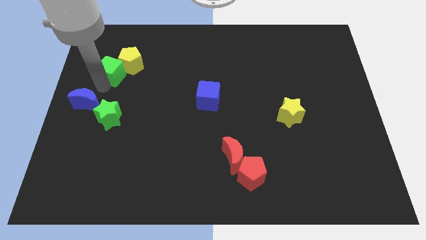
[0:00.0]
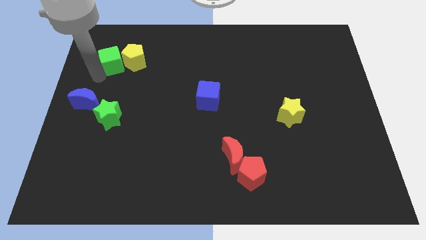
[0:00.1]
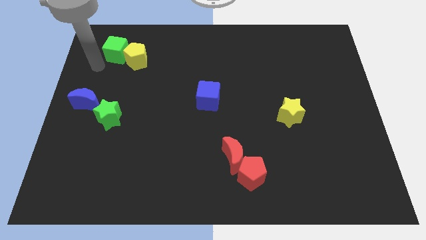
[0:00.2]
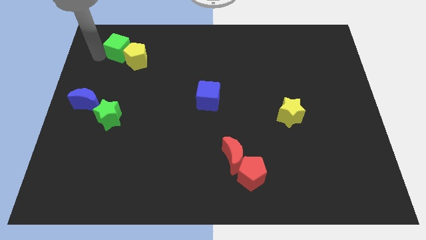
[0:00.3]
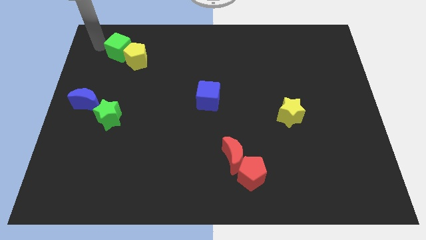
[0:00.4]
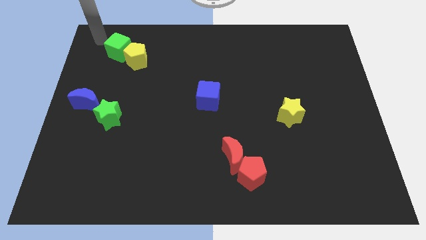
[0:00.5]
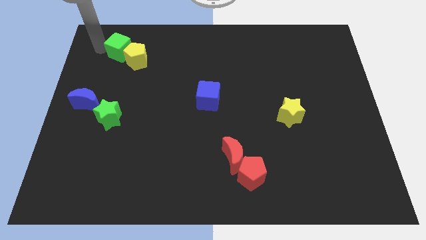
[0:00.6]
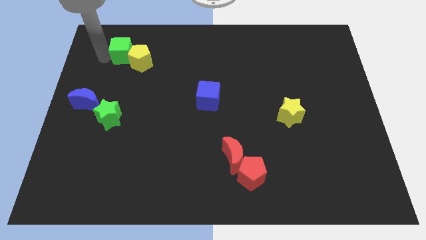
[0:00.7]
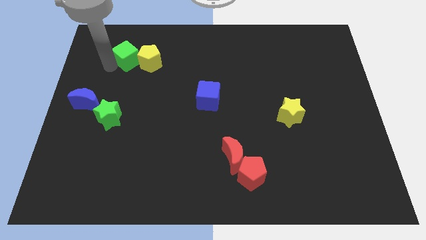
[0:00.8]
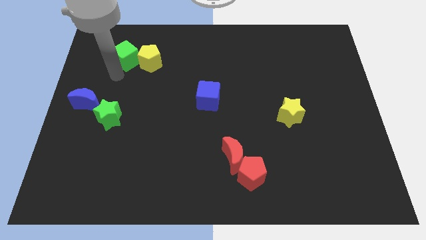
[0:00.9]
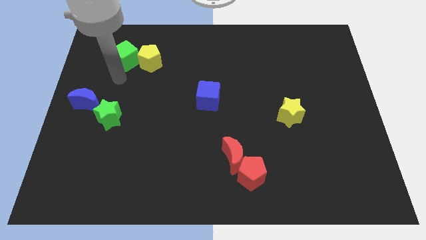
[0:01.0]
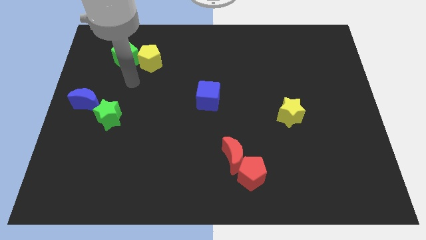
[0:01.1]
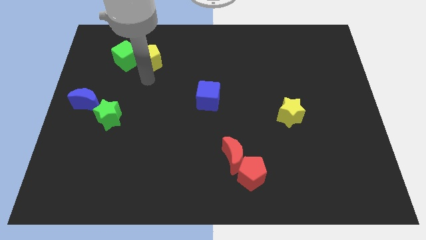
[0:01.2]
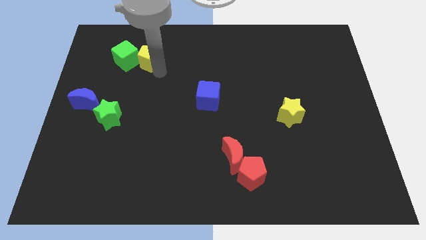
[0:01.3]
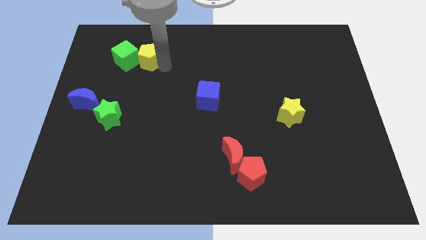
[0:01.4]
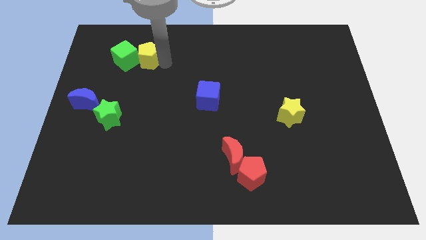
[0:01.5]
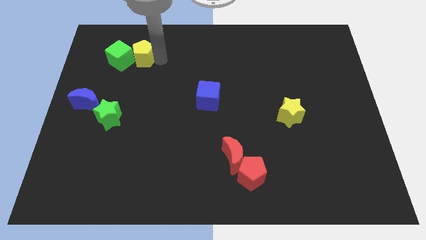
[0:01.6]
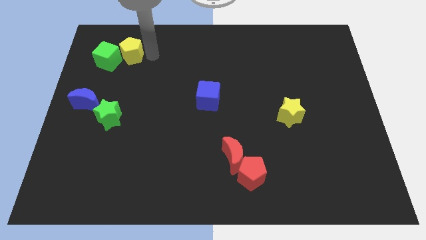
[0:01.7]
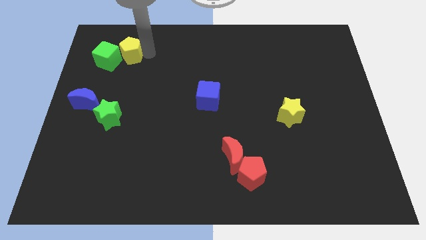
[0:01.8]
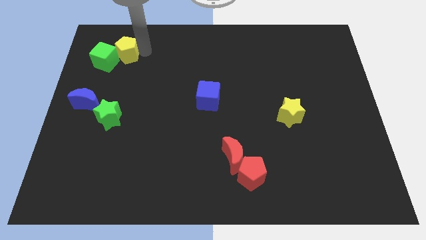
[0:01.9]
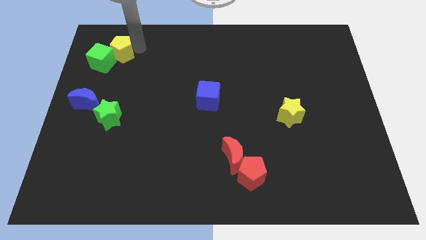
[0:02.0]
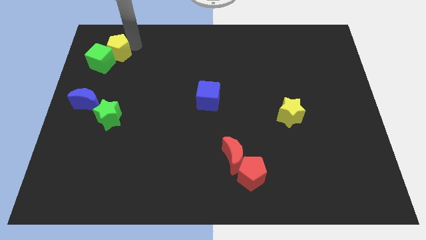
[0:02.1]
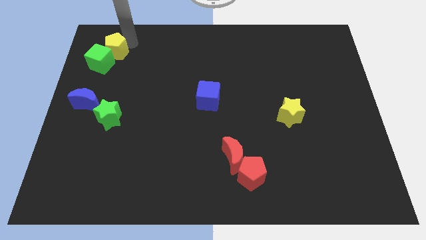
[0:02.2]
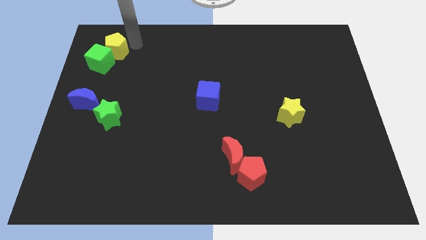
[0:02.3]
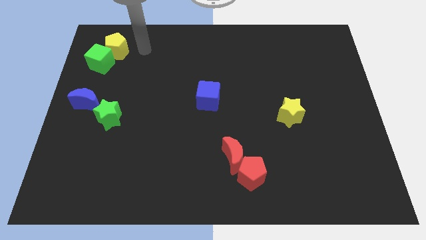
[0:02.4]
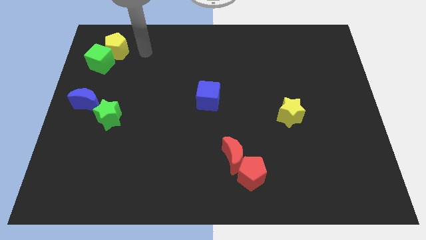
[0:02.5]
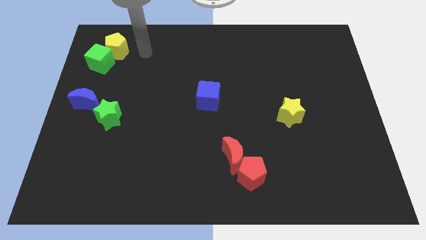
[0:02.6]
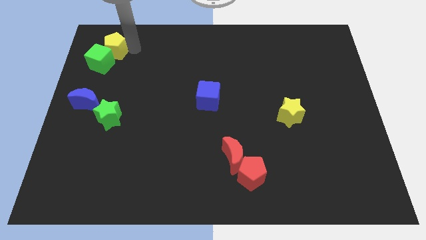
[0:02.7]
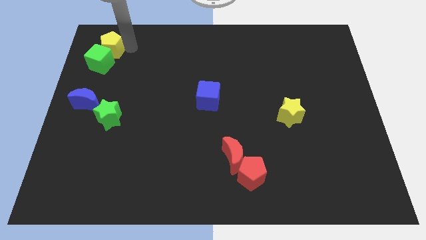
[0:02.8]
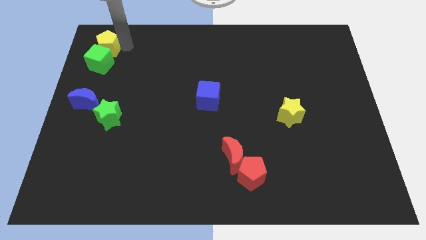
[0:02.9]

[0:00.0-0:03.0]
separate the green cube with yellow pentagon and push them to the left side

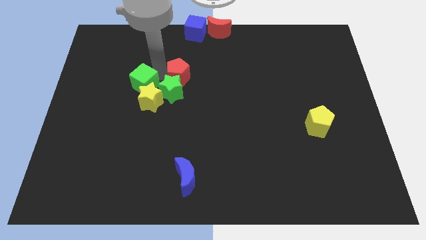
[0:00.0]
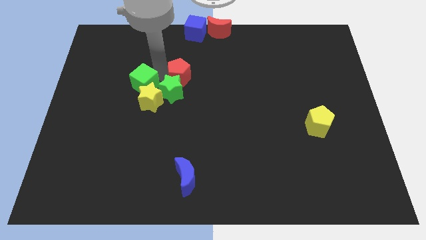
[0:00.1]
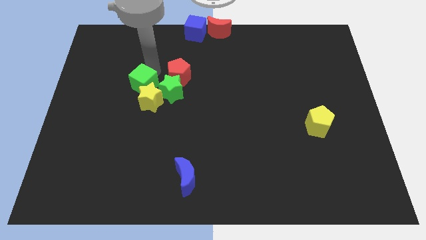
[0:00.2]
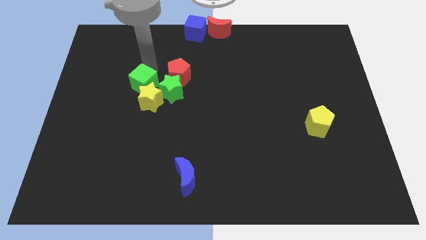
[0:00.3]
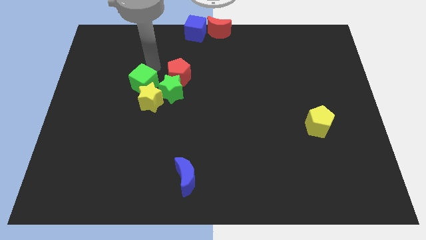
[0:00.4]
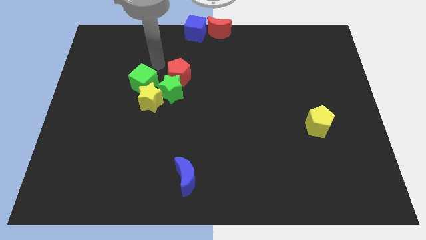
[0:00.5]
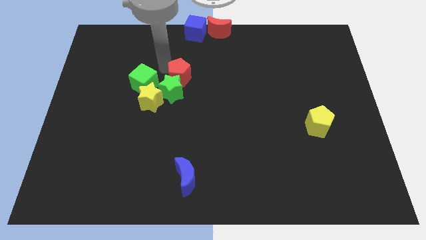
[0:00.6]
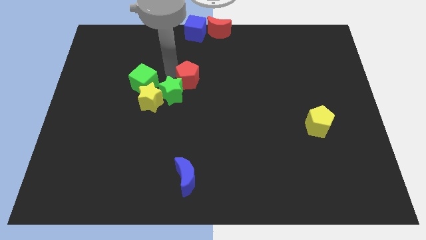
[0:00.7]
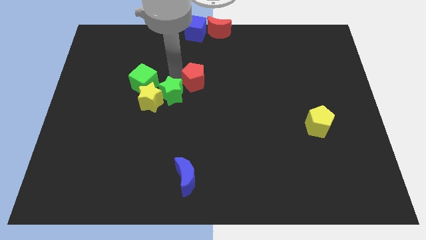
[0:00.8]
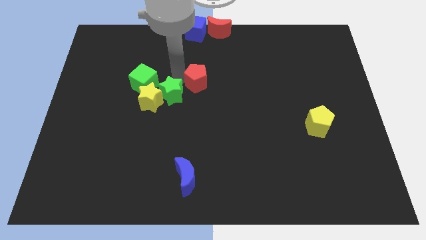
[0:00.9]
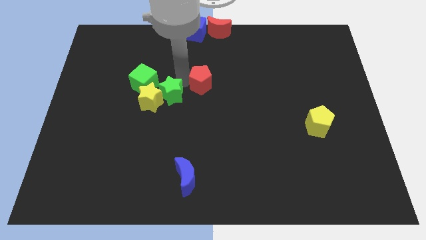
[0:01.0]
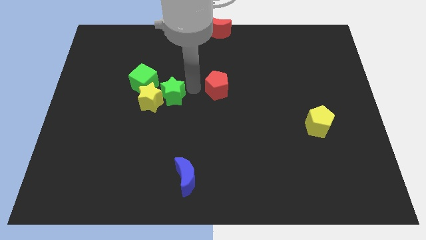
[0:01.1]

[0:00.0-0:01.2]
move the red pentagon to the right slightly

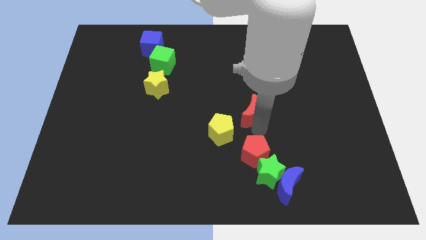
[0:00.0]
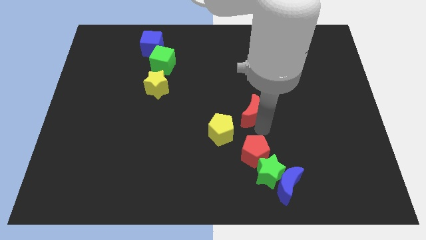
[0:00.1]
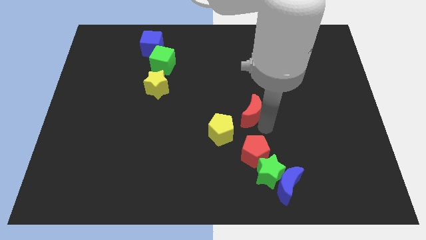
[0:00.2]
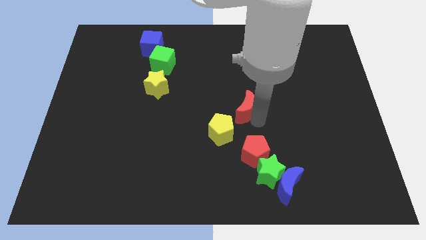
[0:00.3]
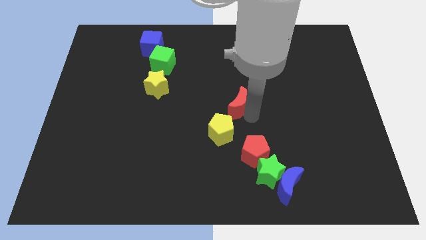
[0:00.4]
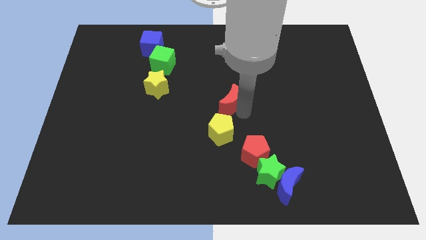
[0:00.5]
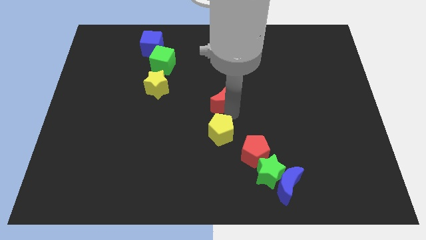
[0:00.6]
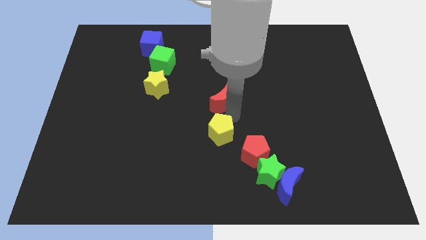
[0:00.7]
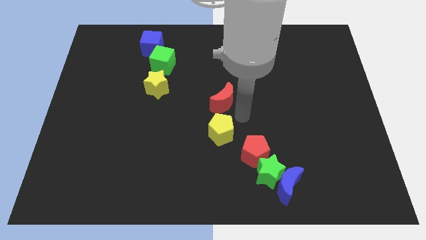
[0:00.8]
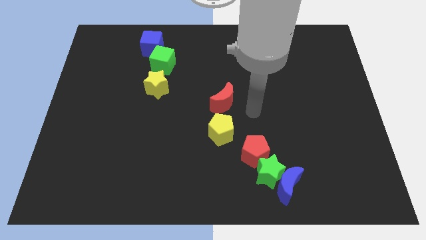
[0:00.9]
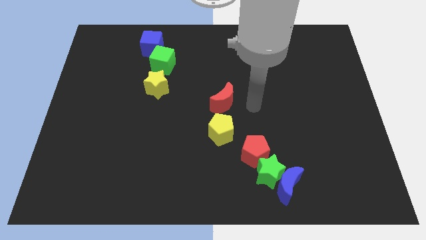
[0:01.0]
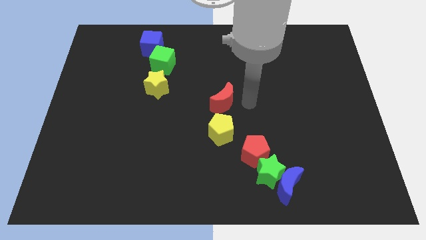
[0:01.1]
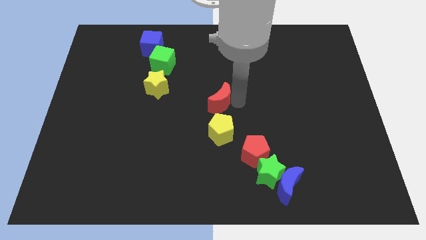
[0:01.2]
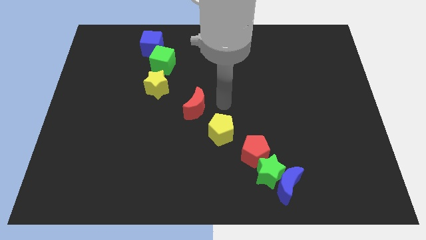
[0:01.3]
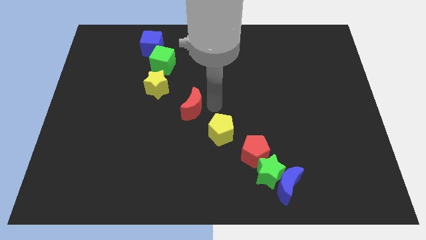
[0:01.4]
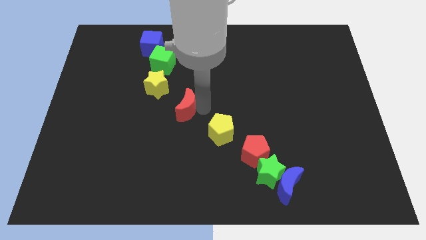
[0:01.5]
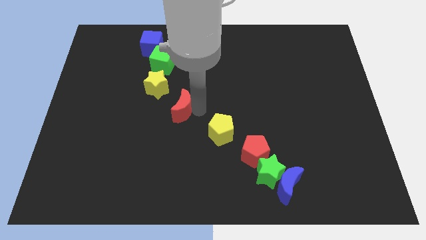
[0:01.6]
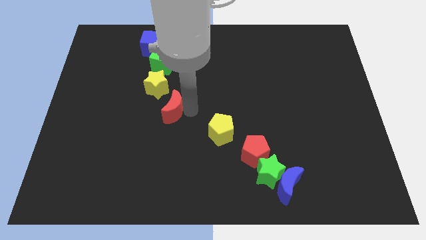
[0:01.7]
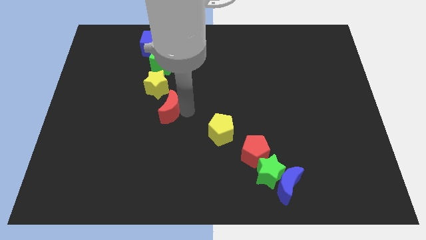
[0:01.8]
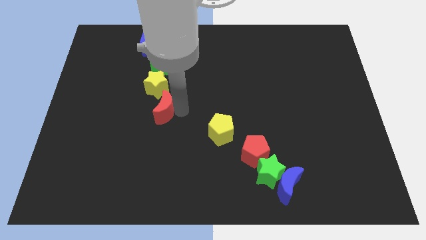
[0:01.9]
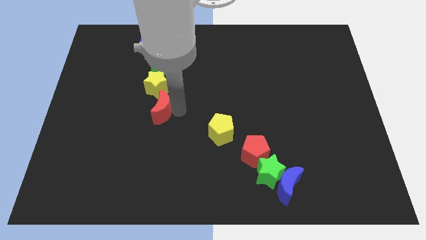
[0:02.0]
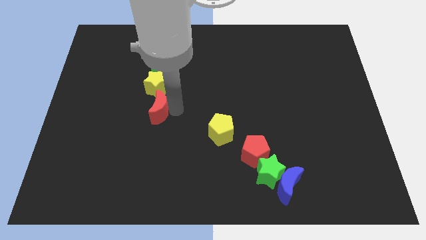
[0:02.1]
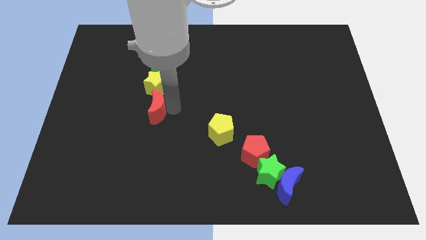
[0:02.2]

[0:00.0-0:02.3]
move the red crescent to the bottom of the yellow star

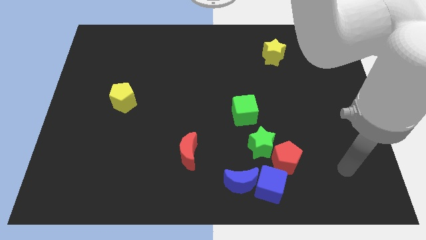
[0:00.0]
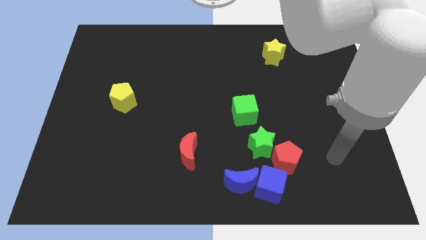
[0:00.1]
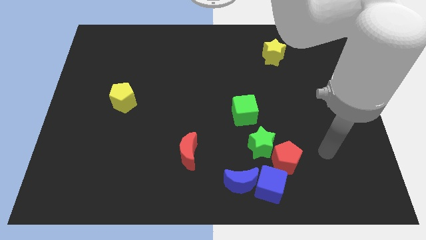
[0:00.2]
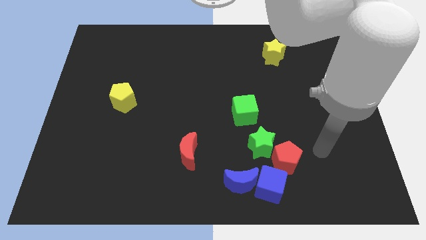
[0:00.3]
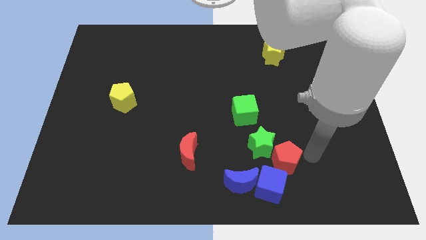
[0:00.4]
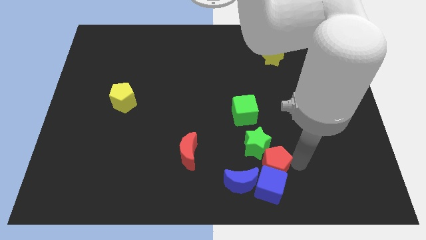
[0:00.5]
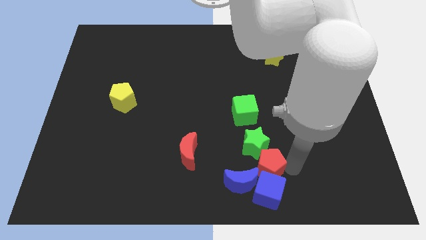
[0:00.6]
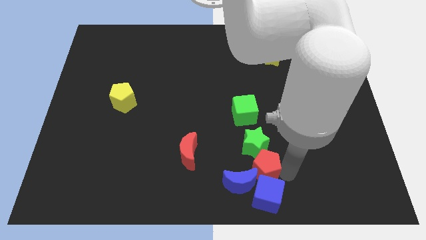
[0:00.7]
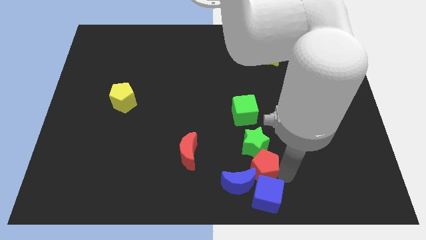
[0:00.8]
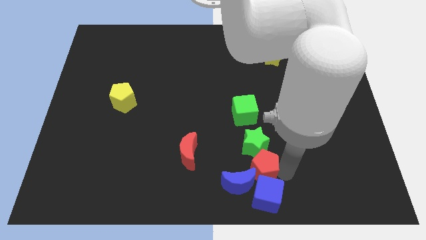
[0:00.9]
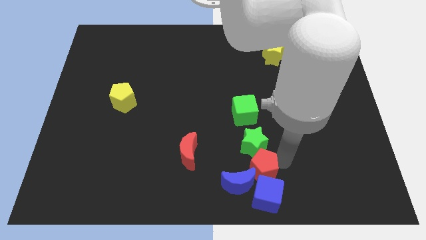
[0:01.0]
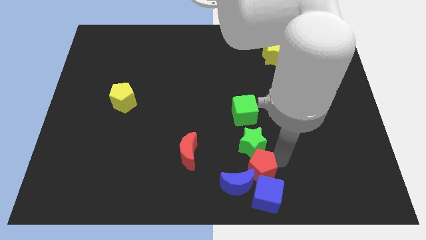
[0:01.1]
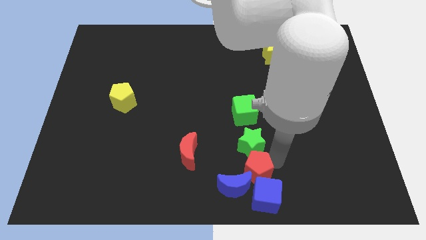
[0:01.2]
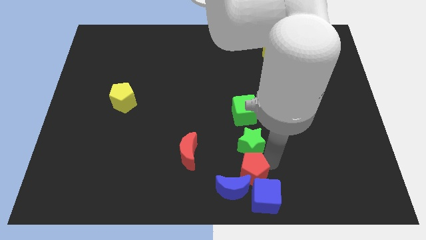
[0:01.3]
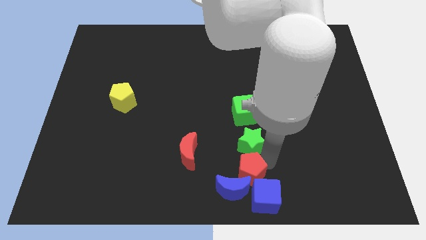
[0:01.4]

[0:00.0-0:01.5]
push the red pentagon into both the blue blocks and green star

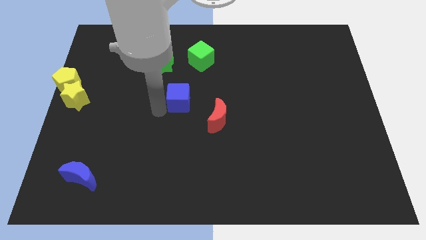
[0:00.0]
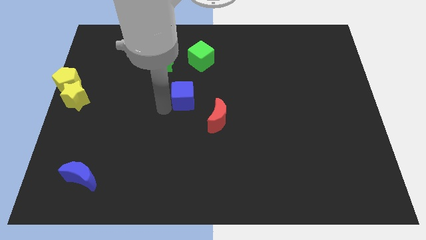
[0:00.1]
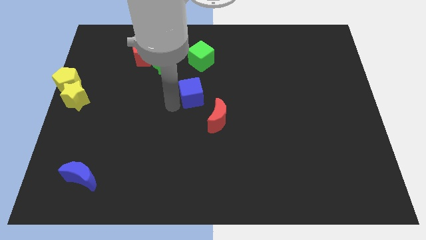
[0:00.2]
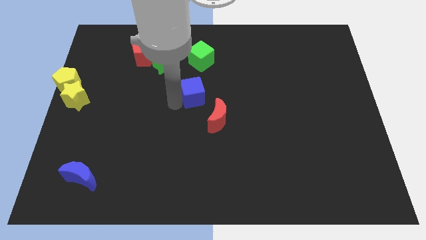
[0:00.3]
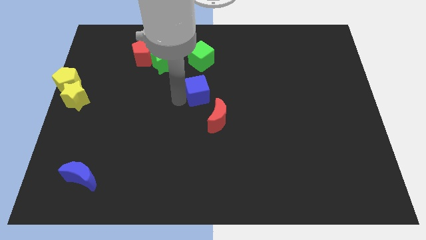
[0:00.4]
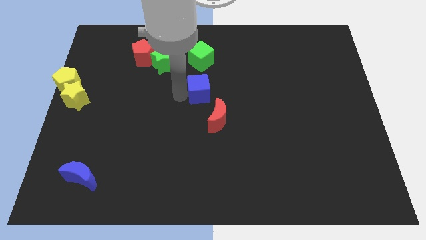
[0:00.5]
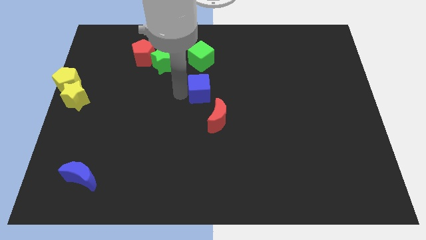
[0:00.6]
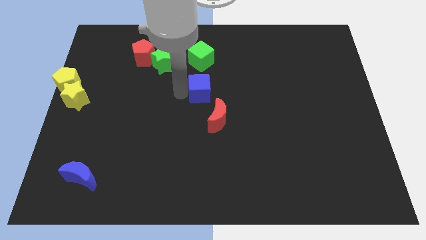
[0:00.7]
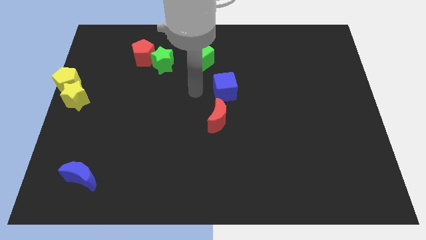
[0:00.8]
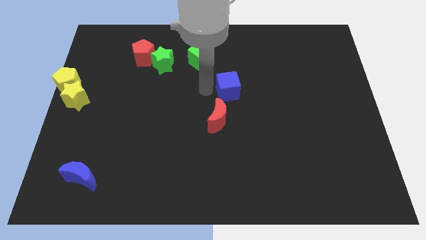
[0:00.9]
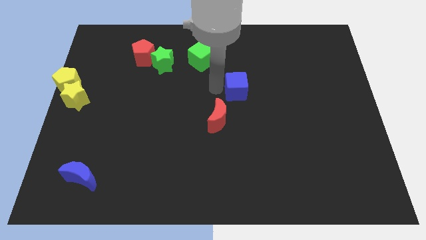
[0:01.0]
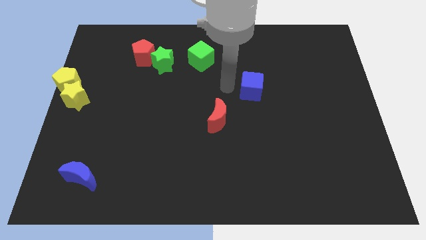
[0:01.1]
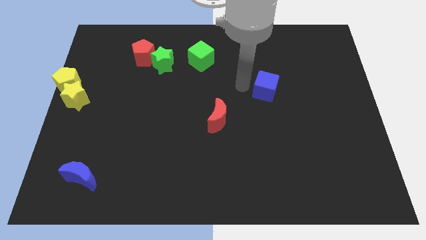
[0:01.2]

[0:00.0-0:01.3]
push the blue cube towards the center right of the board
